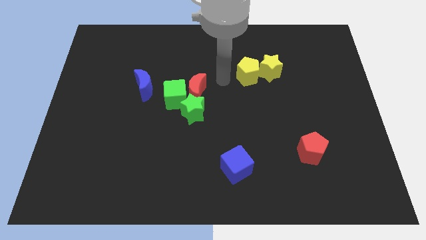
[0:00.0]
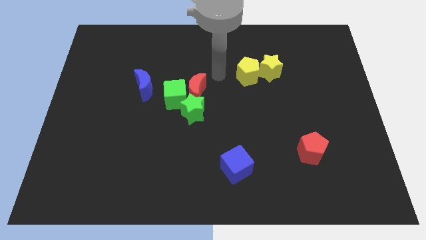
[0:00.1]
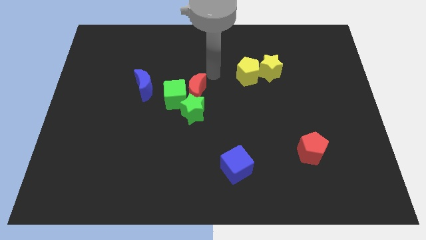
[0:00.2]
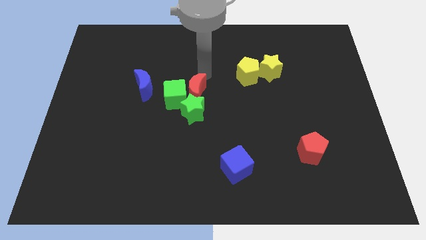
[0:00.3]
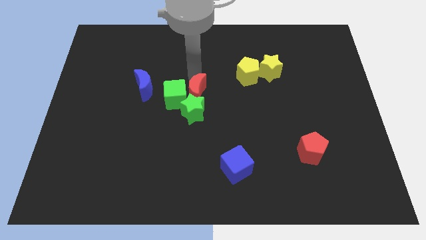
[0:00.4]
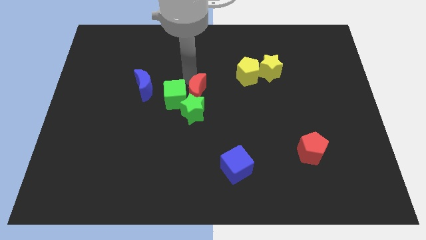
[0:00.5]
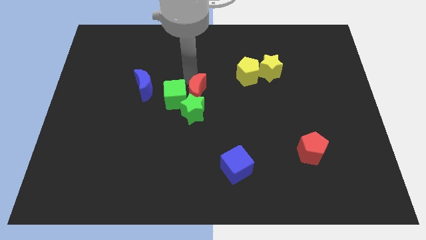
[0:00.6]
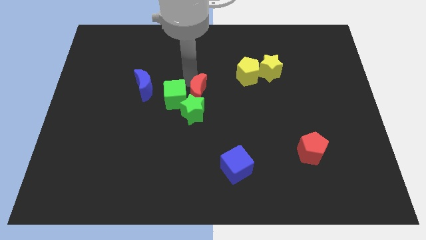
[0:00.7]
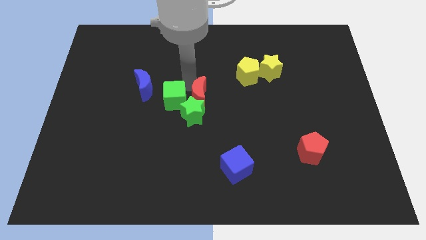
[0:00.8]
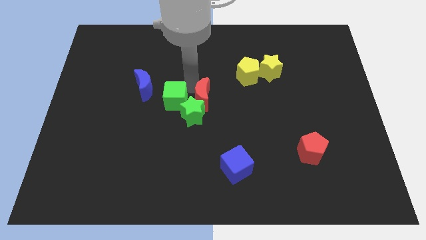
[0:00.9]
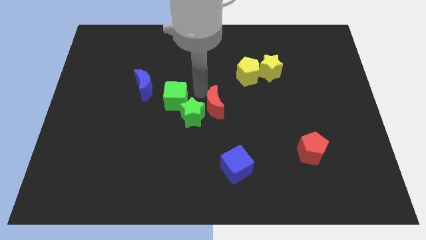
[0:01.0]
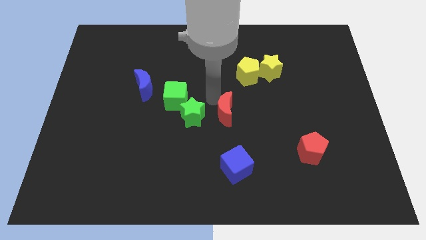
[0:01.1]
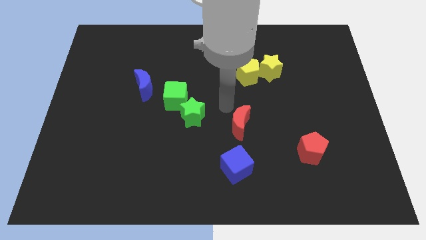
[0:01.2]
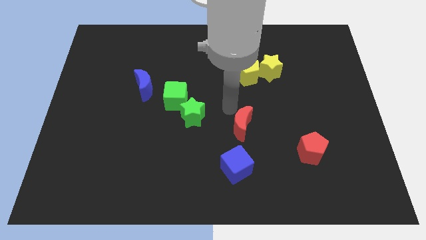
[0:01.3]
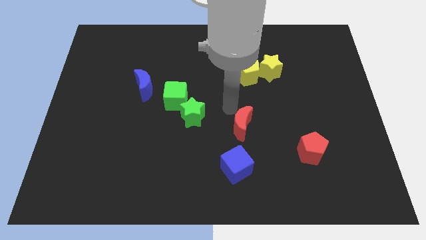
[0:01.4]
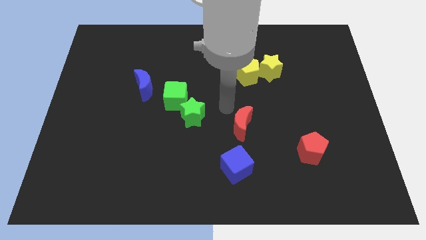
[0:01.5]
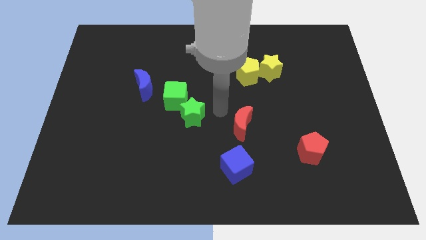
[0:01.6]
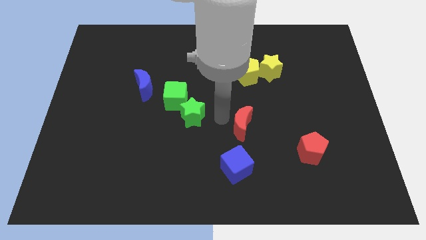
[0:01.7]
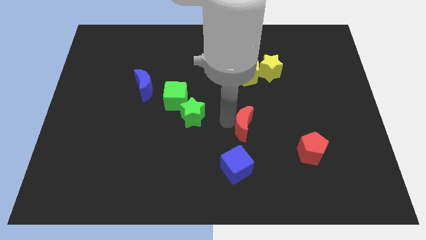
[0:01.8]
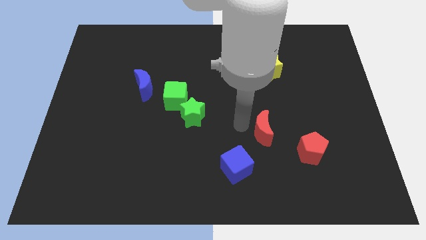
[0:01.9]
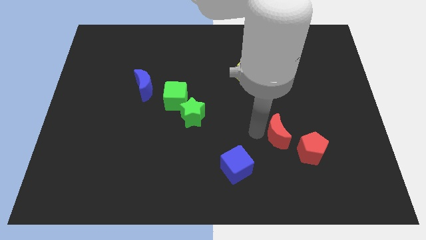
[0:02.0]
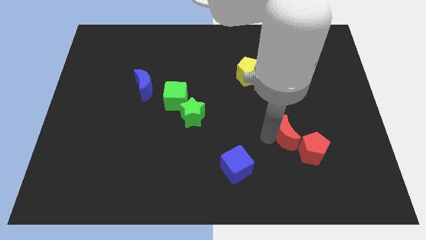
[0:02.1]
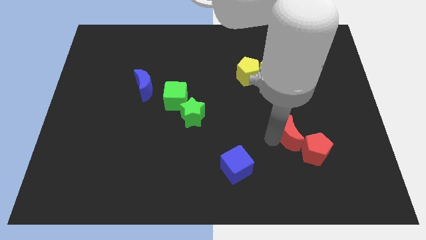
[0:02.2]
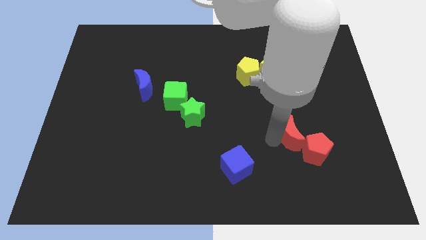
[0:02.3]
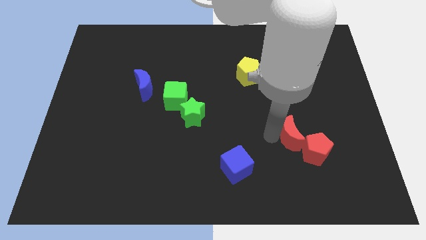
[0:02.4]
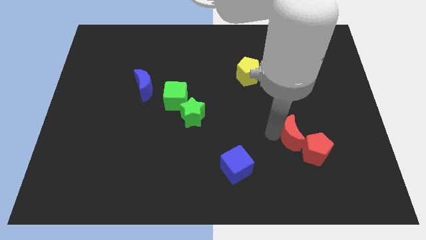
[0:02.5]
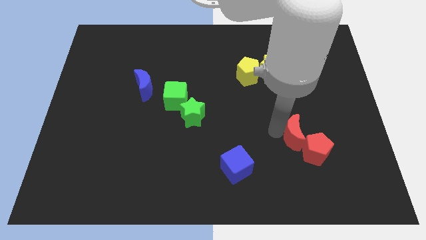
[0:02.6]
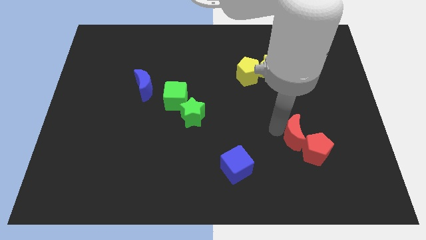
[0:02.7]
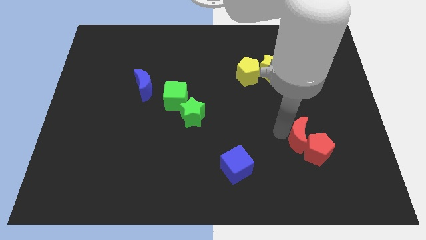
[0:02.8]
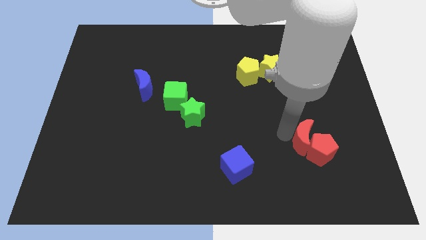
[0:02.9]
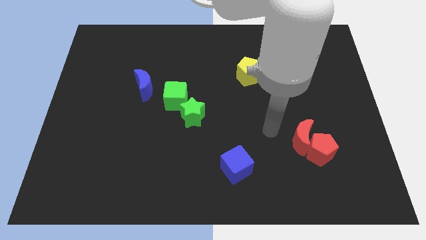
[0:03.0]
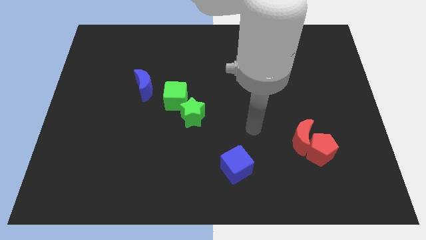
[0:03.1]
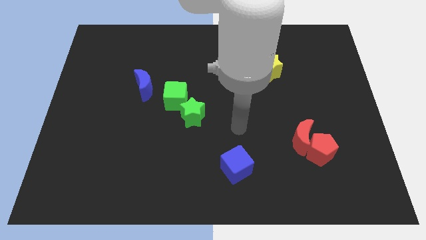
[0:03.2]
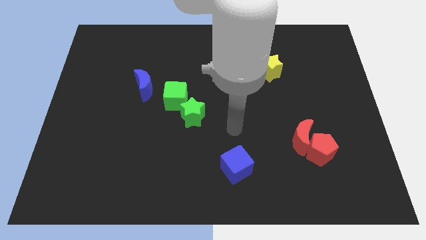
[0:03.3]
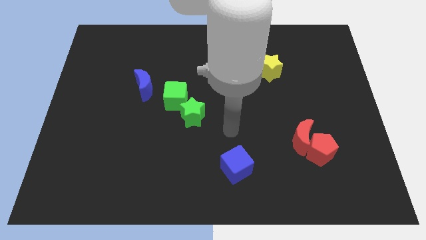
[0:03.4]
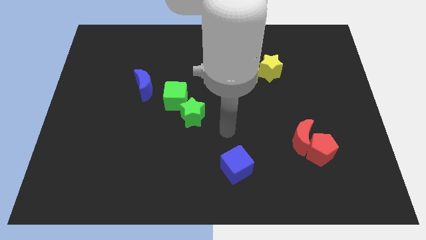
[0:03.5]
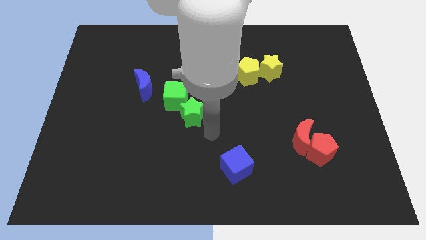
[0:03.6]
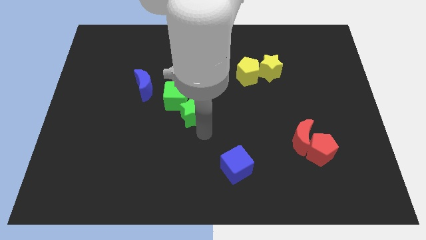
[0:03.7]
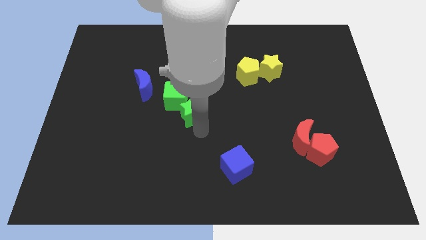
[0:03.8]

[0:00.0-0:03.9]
push the red crescent into the red pentagon

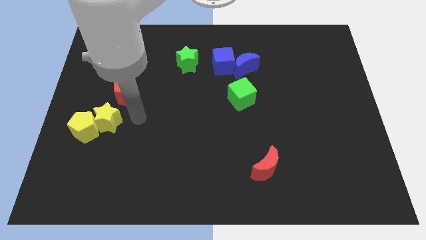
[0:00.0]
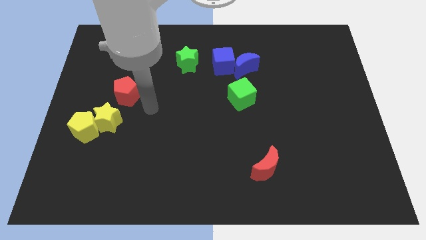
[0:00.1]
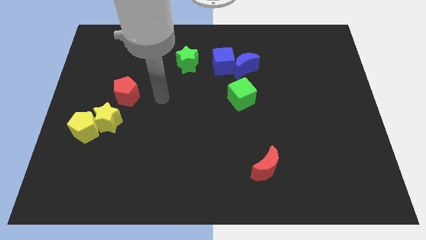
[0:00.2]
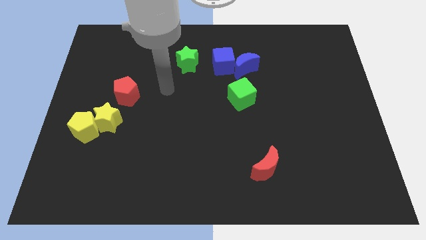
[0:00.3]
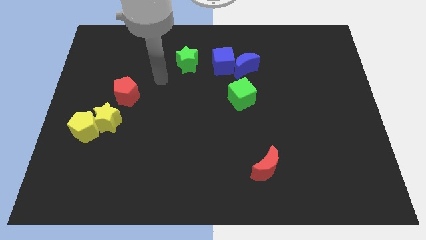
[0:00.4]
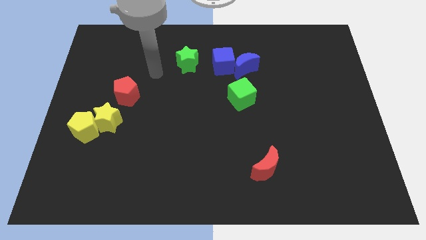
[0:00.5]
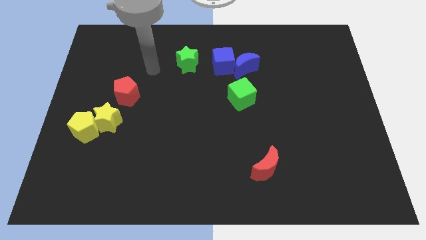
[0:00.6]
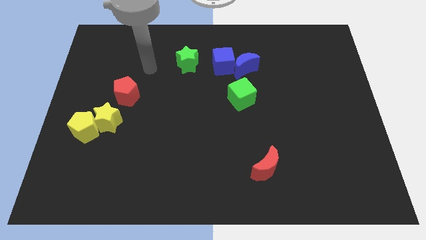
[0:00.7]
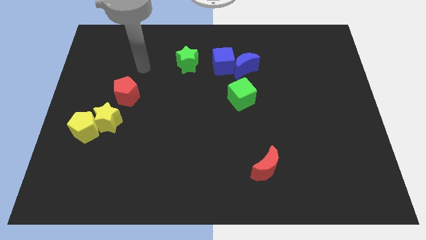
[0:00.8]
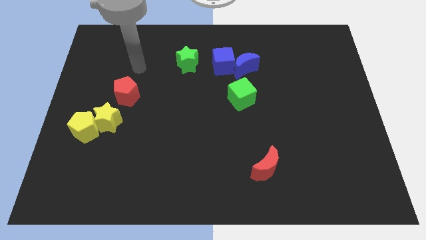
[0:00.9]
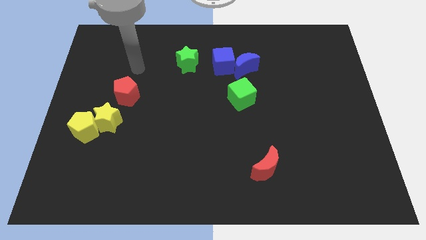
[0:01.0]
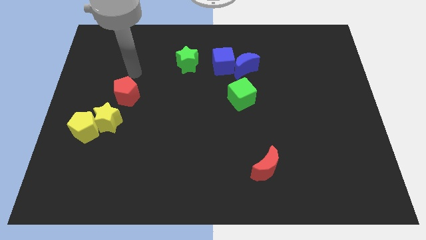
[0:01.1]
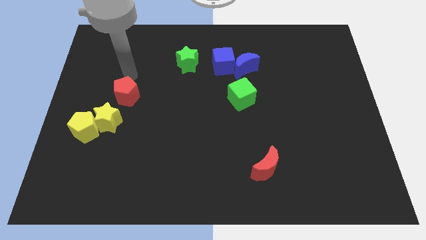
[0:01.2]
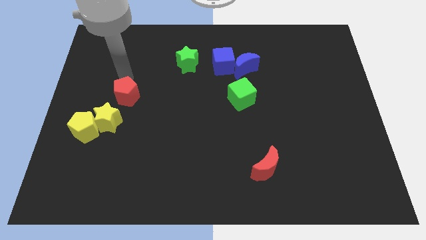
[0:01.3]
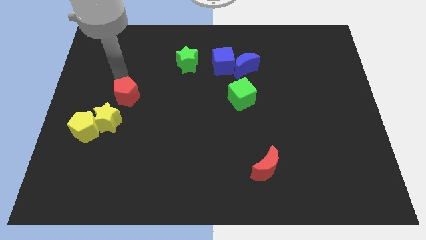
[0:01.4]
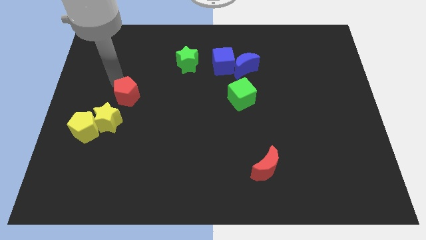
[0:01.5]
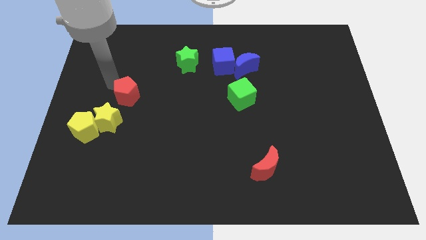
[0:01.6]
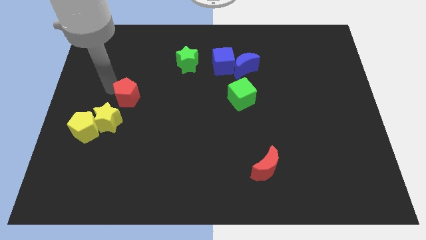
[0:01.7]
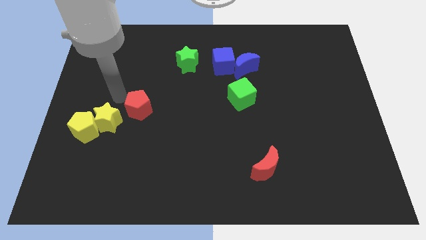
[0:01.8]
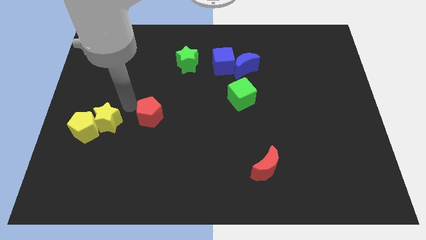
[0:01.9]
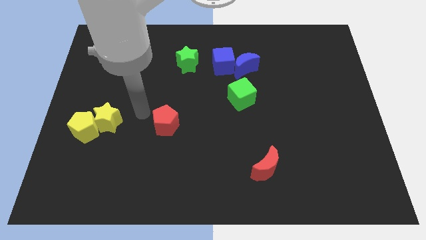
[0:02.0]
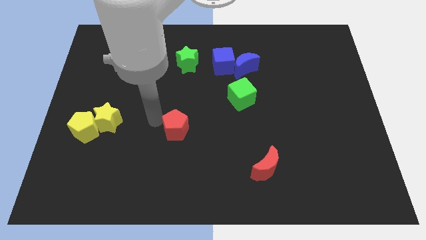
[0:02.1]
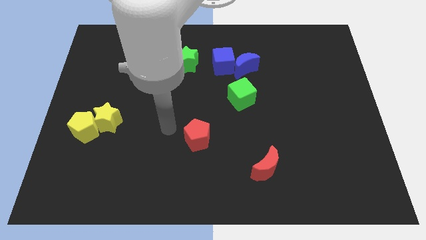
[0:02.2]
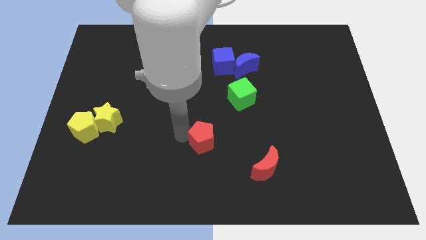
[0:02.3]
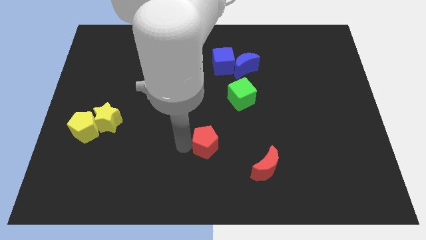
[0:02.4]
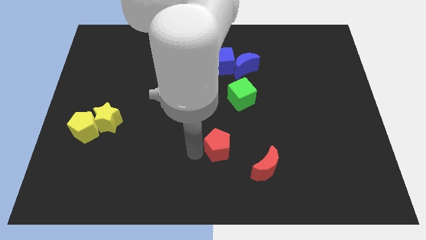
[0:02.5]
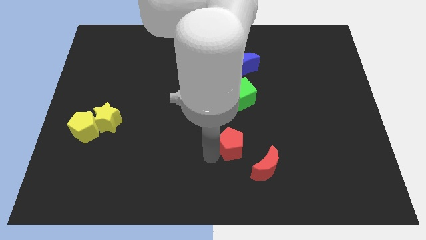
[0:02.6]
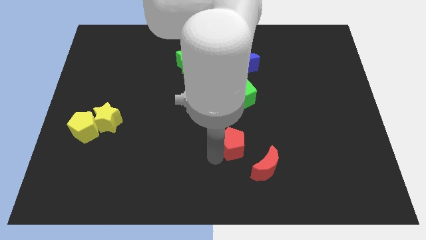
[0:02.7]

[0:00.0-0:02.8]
push the red pentagon towards the red moon

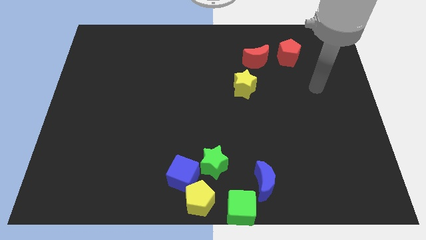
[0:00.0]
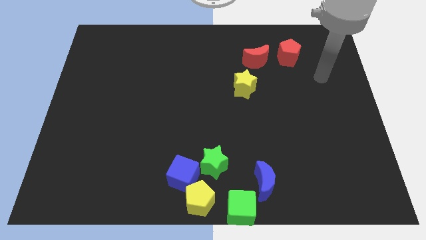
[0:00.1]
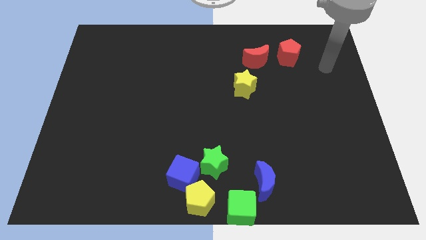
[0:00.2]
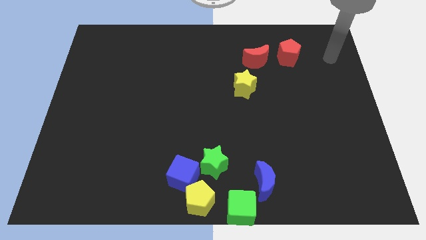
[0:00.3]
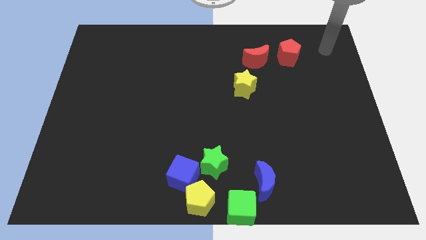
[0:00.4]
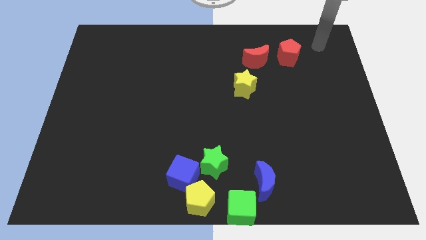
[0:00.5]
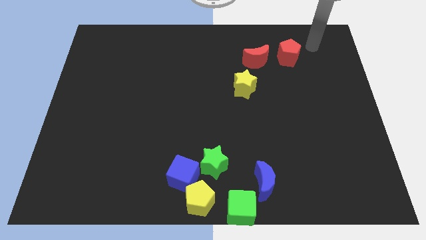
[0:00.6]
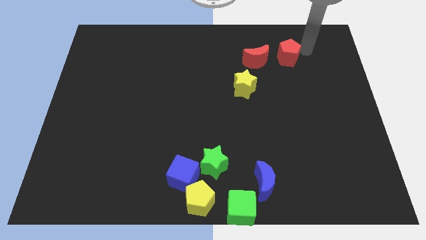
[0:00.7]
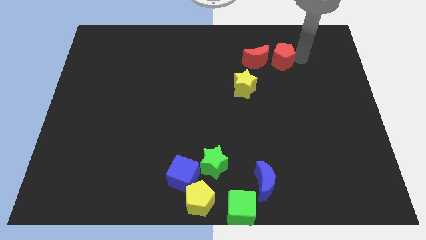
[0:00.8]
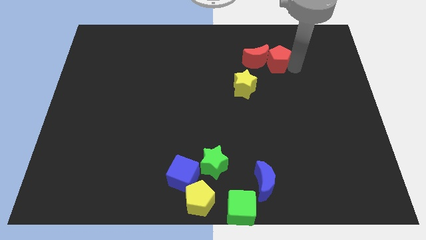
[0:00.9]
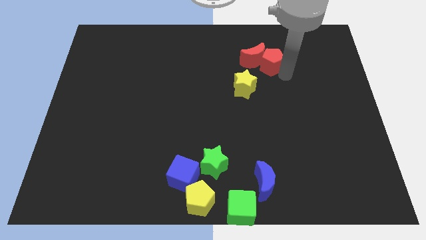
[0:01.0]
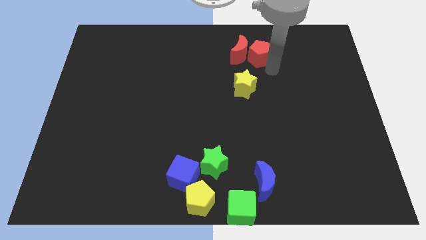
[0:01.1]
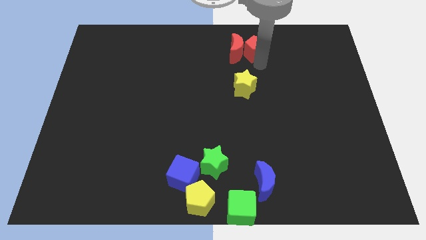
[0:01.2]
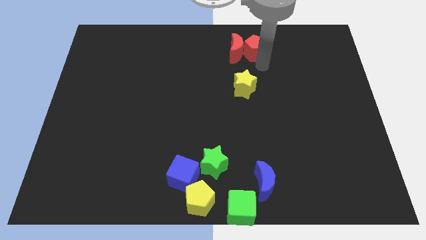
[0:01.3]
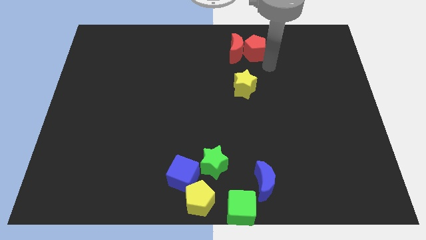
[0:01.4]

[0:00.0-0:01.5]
move red pentagon close to red crescent

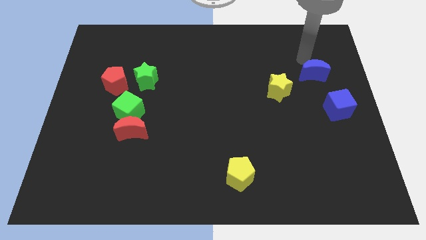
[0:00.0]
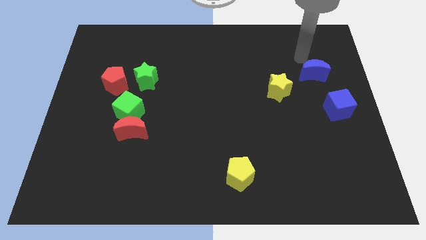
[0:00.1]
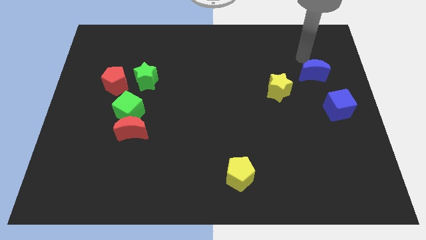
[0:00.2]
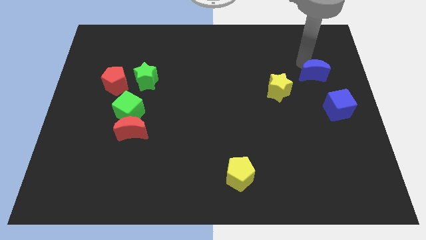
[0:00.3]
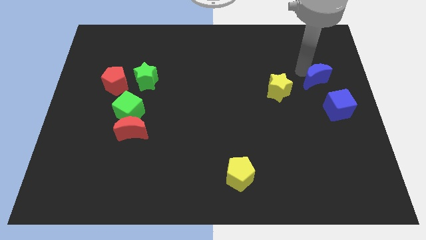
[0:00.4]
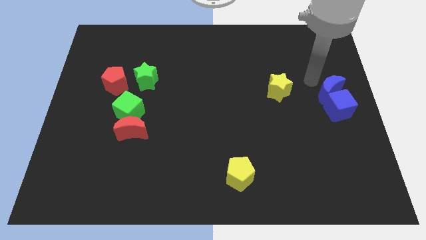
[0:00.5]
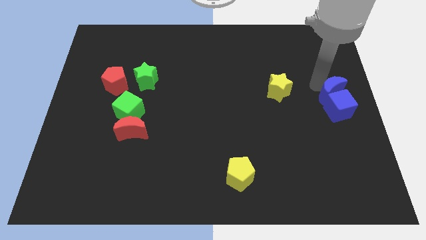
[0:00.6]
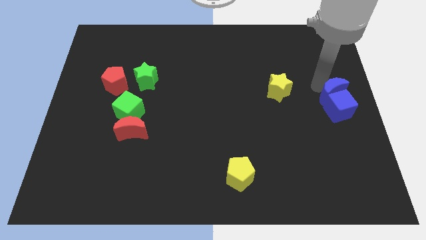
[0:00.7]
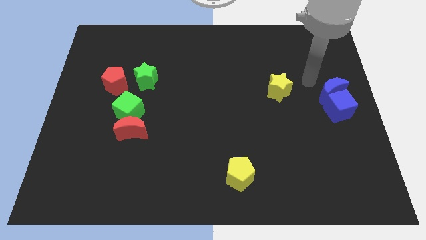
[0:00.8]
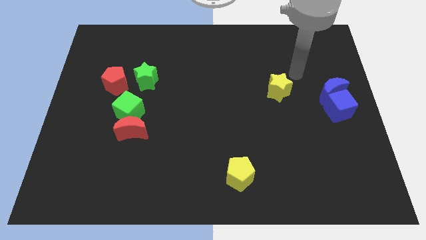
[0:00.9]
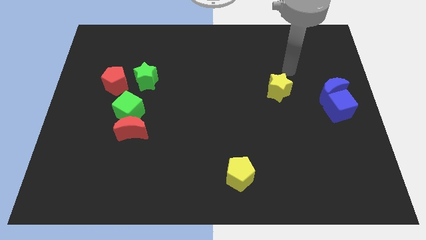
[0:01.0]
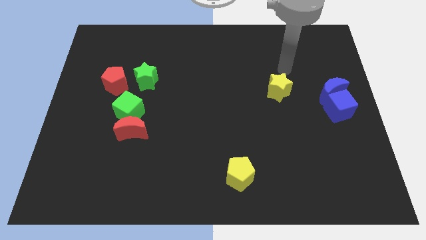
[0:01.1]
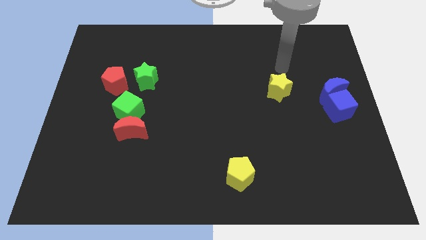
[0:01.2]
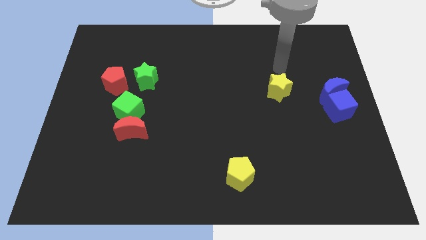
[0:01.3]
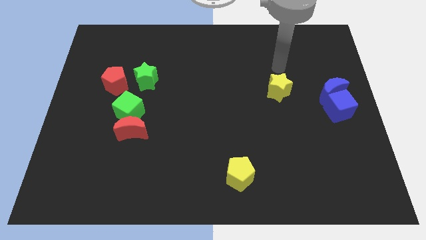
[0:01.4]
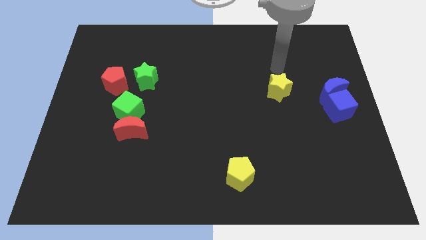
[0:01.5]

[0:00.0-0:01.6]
push the blue crescent into the blue cube
